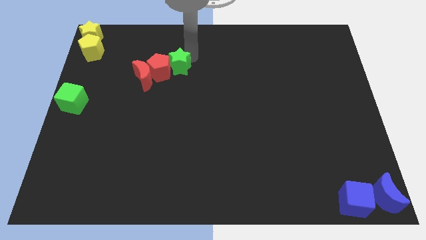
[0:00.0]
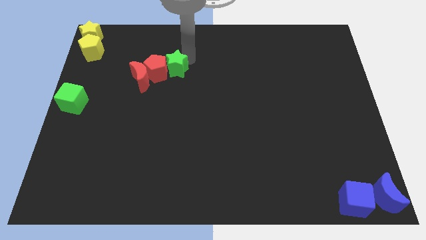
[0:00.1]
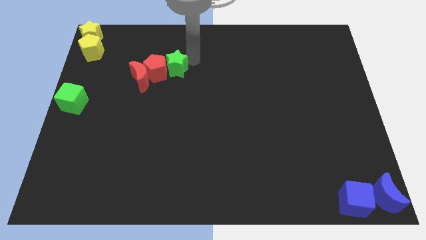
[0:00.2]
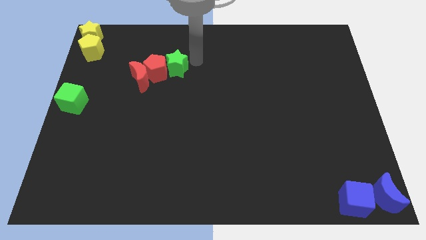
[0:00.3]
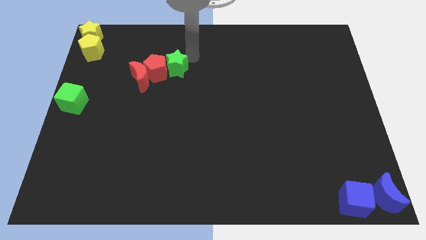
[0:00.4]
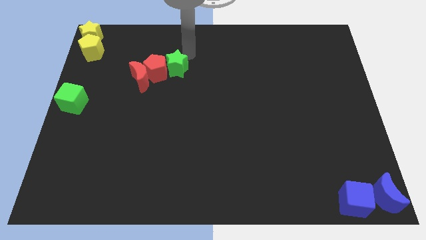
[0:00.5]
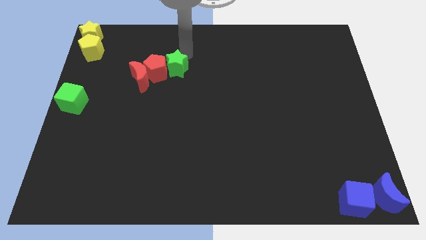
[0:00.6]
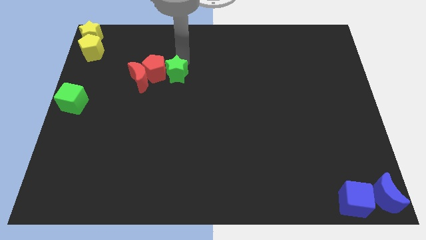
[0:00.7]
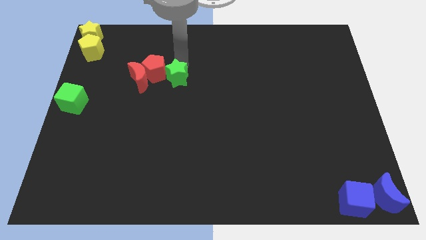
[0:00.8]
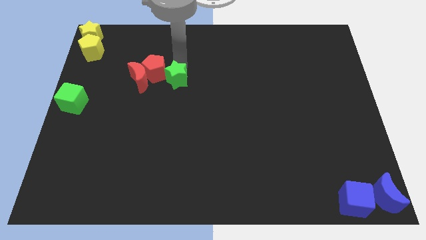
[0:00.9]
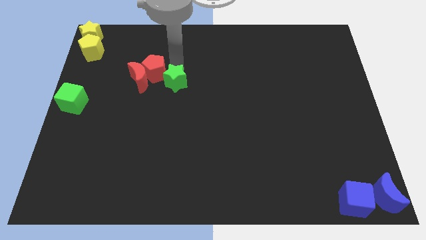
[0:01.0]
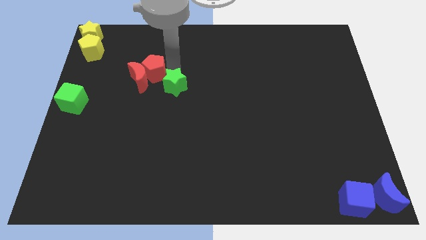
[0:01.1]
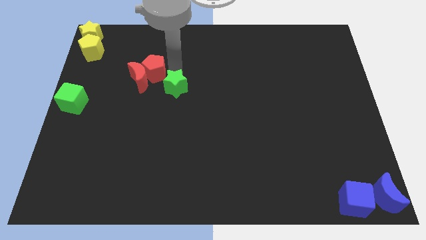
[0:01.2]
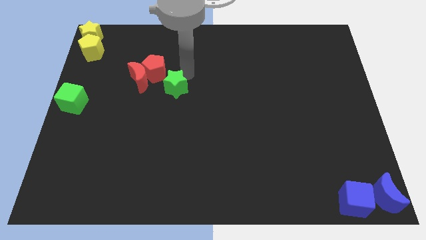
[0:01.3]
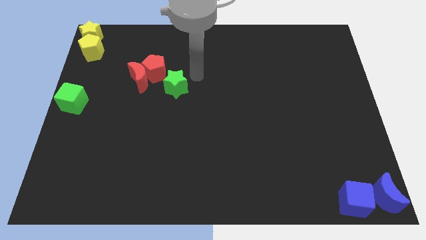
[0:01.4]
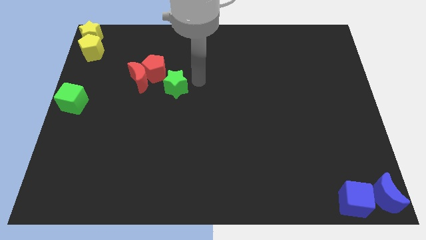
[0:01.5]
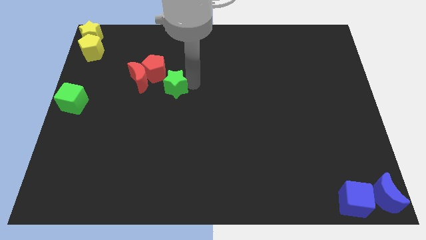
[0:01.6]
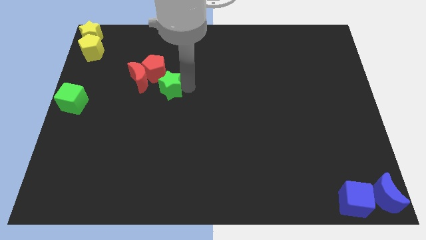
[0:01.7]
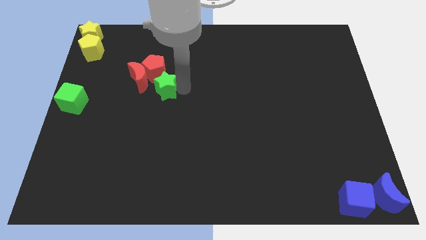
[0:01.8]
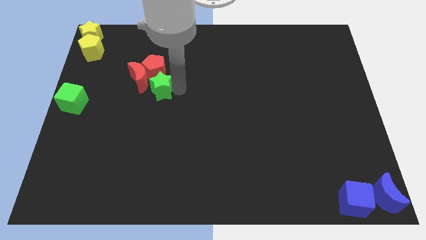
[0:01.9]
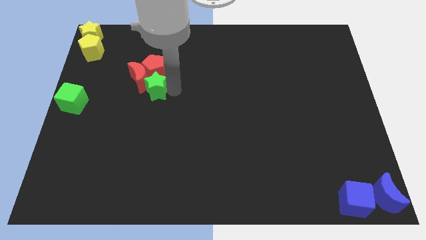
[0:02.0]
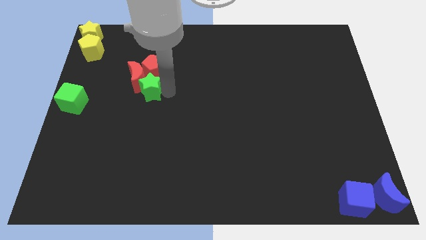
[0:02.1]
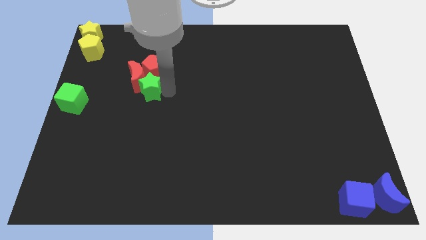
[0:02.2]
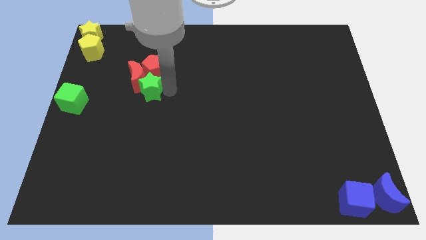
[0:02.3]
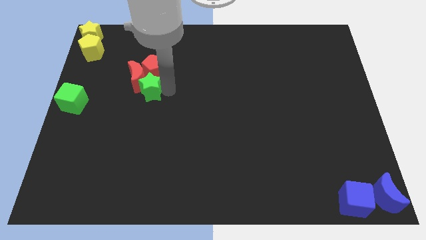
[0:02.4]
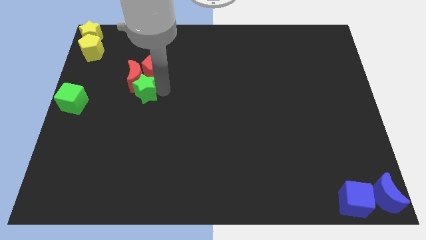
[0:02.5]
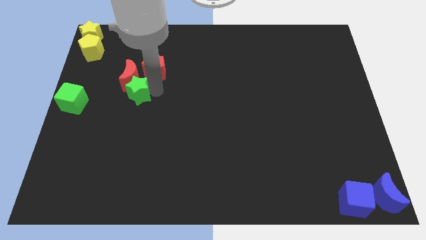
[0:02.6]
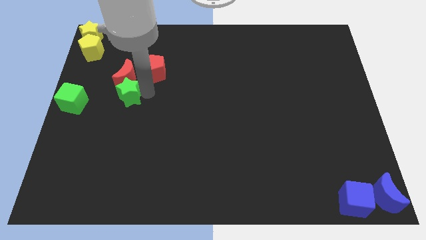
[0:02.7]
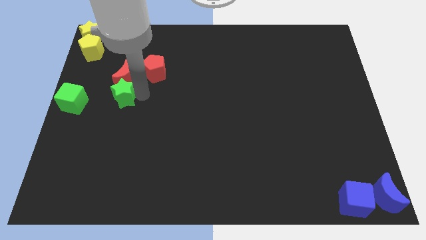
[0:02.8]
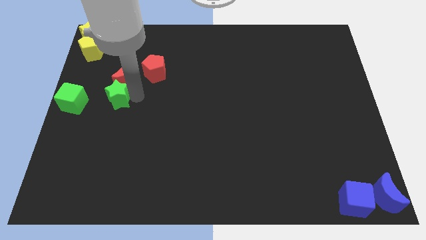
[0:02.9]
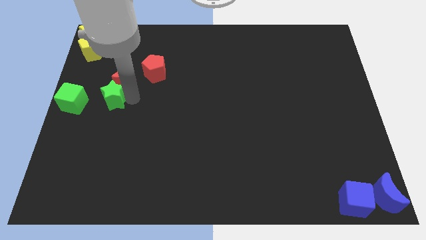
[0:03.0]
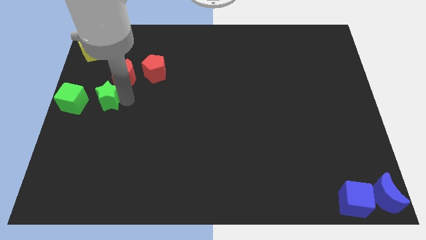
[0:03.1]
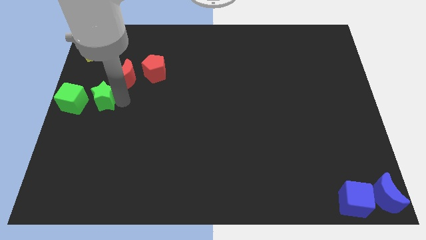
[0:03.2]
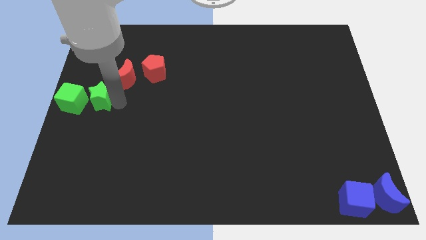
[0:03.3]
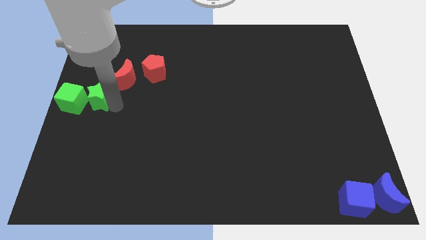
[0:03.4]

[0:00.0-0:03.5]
push the green star right to the green cube

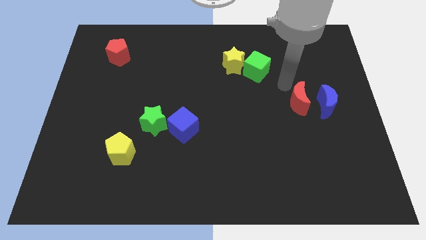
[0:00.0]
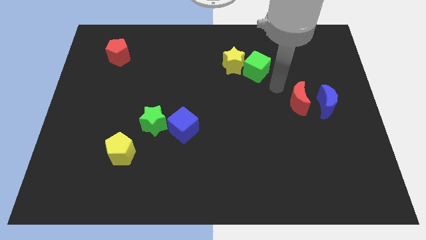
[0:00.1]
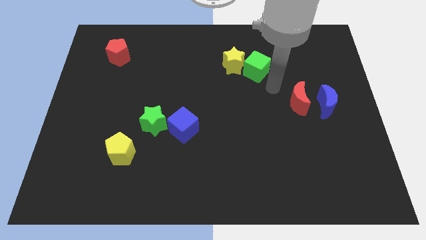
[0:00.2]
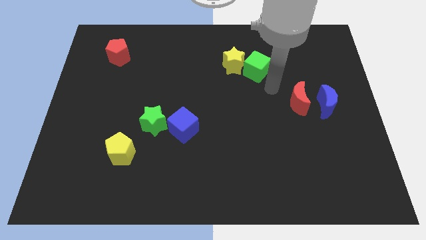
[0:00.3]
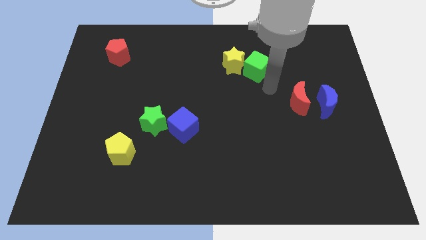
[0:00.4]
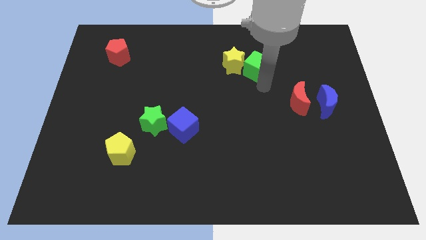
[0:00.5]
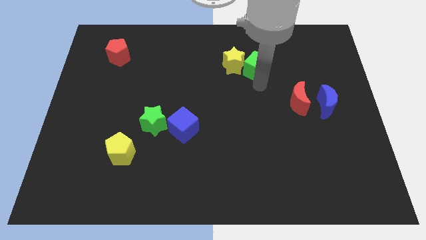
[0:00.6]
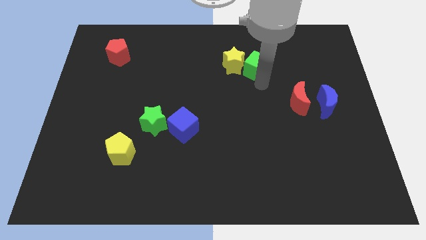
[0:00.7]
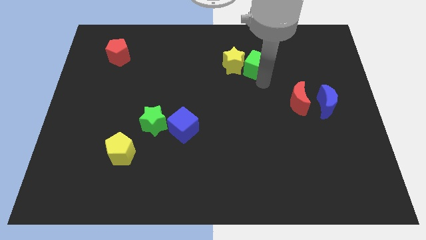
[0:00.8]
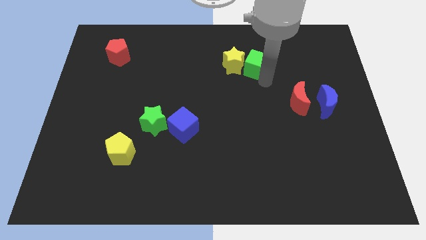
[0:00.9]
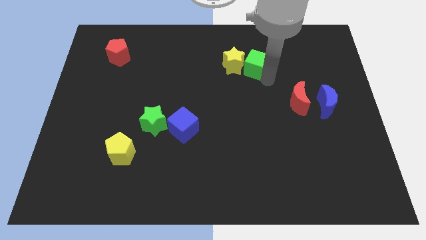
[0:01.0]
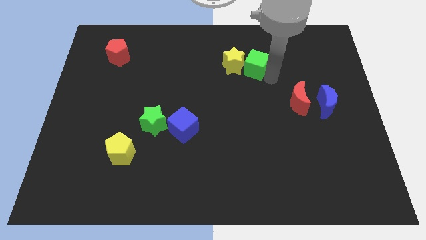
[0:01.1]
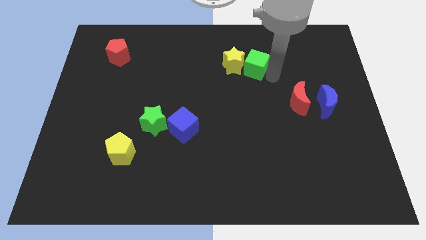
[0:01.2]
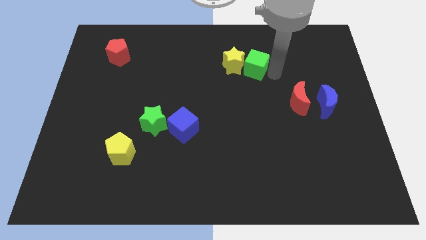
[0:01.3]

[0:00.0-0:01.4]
slightly move the green cube to the top of the board

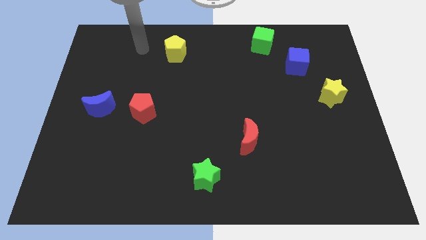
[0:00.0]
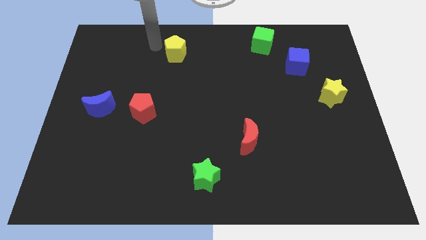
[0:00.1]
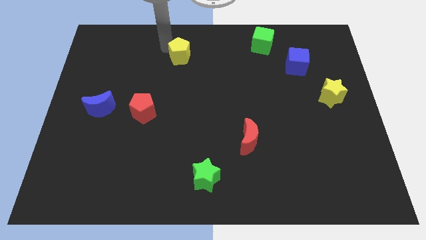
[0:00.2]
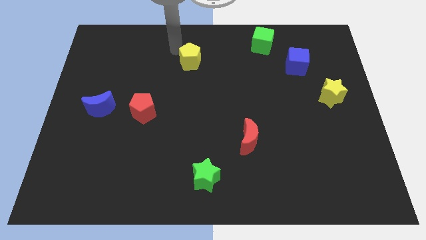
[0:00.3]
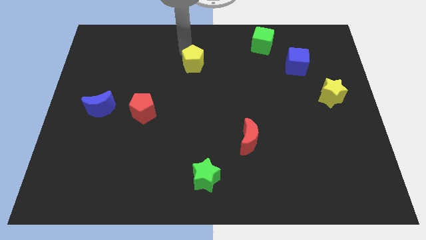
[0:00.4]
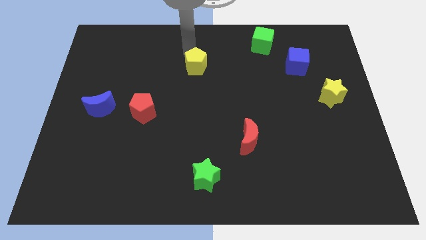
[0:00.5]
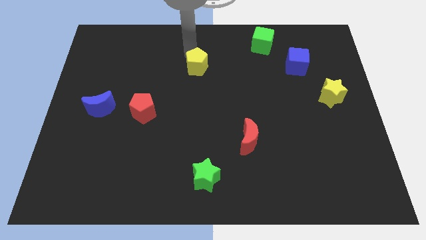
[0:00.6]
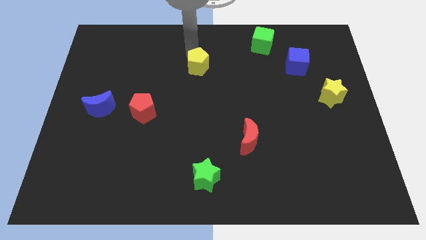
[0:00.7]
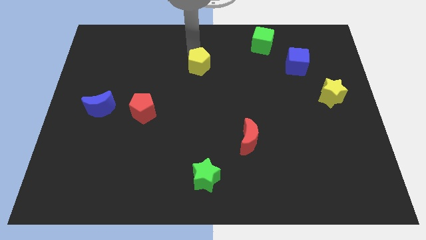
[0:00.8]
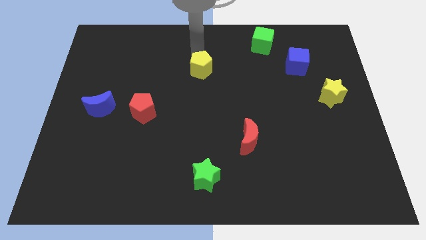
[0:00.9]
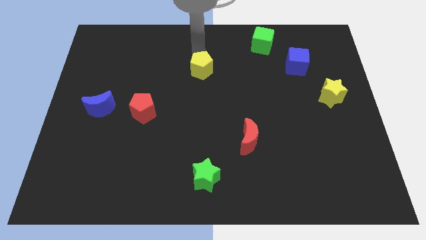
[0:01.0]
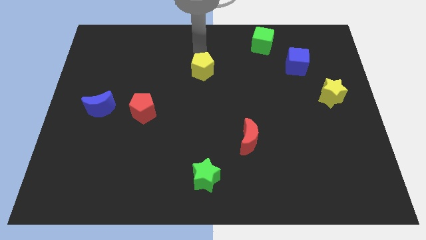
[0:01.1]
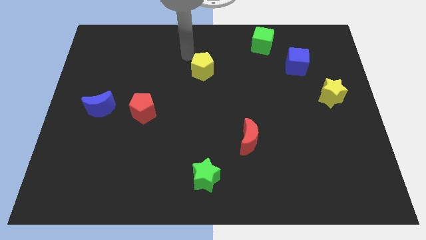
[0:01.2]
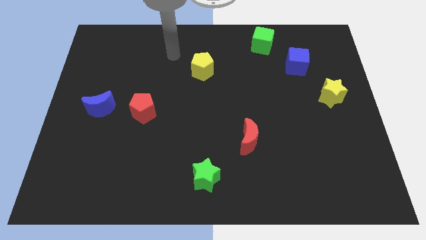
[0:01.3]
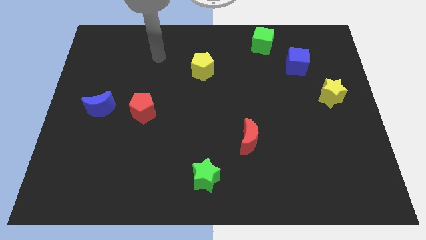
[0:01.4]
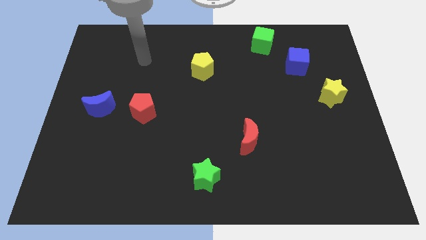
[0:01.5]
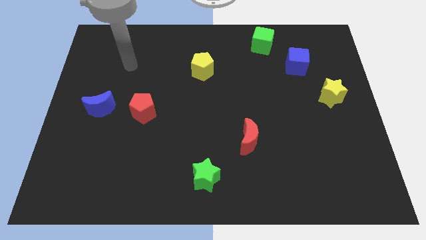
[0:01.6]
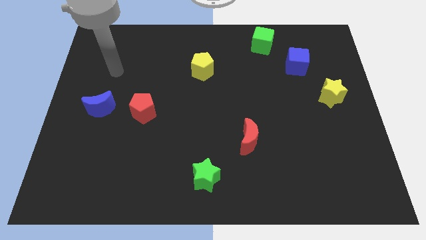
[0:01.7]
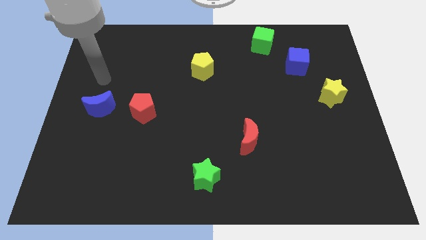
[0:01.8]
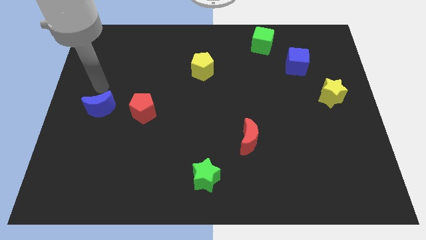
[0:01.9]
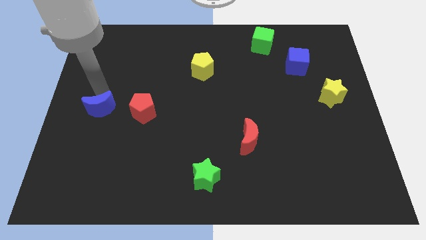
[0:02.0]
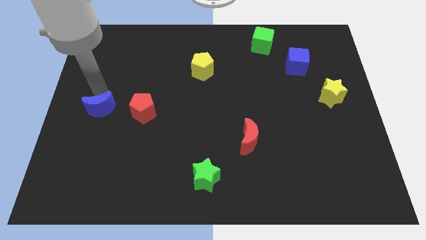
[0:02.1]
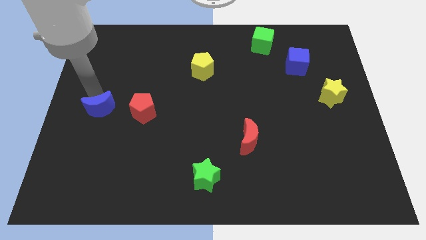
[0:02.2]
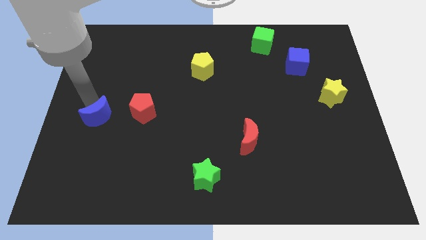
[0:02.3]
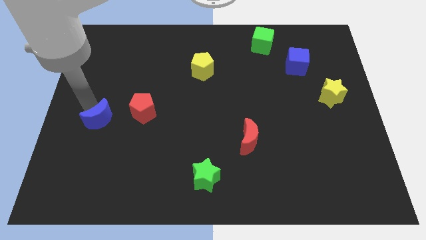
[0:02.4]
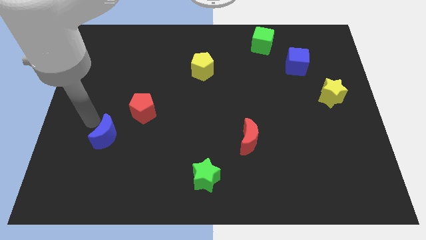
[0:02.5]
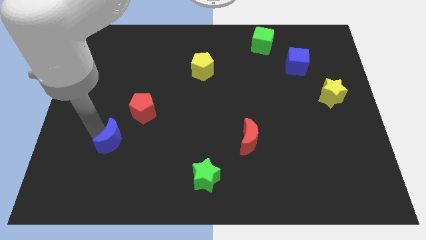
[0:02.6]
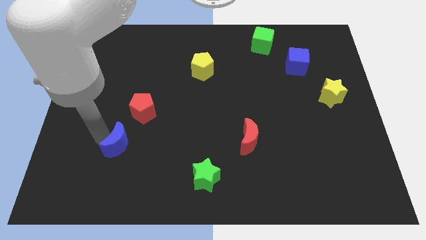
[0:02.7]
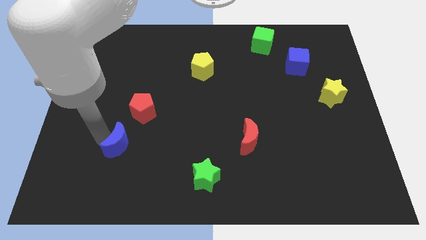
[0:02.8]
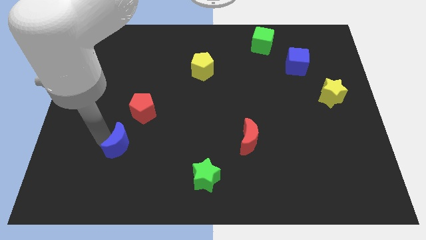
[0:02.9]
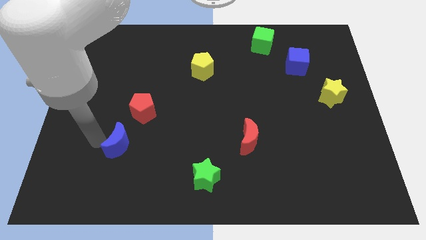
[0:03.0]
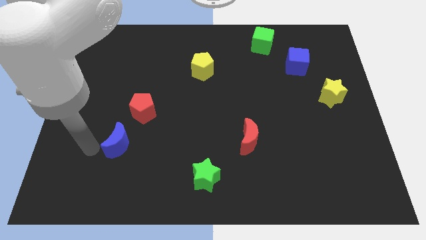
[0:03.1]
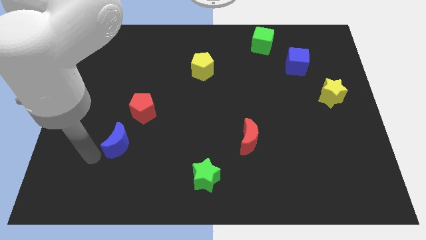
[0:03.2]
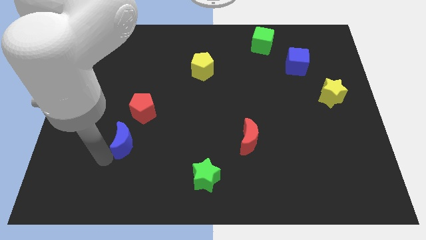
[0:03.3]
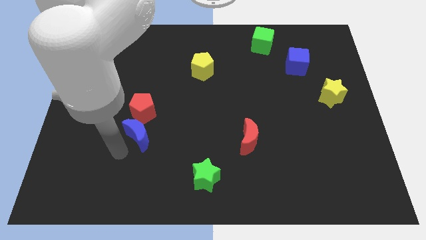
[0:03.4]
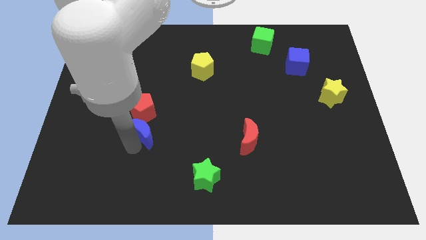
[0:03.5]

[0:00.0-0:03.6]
place the blue crescent to the bottom of the red pentagon

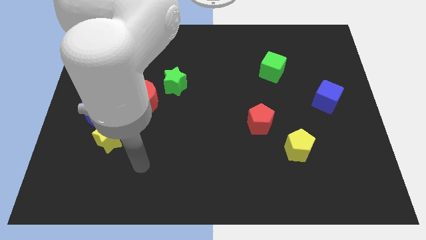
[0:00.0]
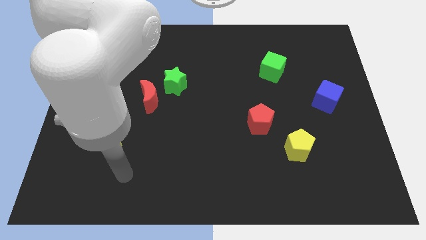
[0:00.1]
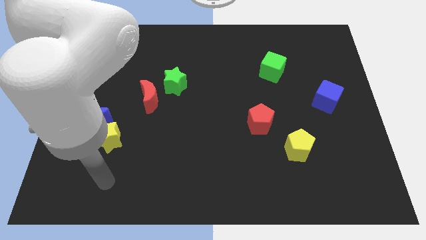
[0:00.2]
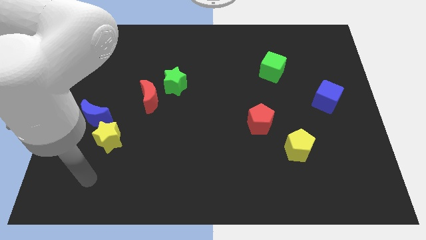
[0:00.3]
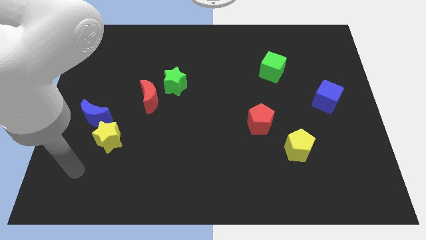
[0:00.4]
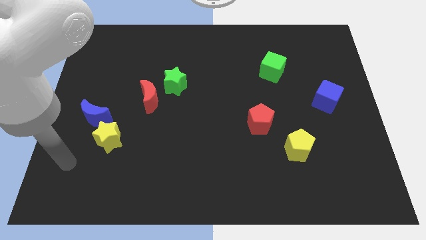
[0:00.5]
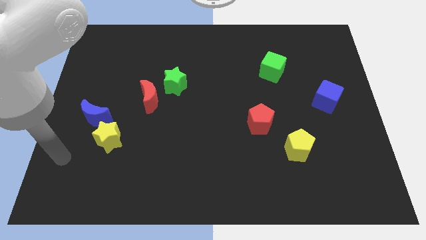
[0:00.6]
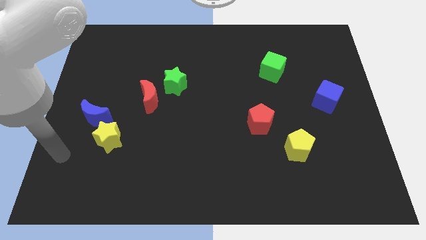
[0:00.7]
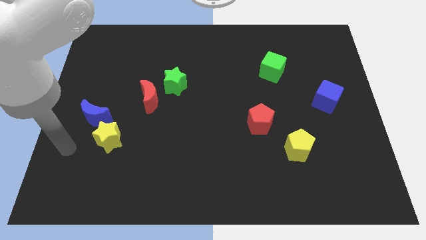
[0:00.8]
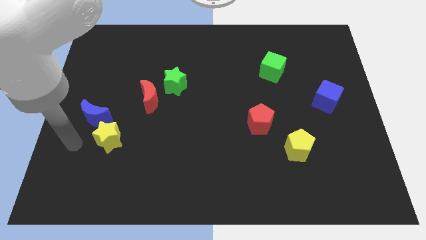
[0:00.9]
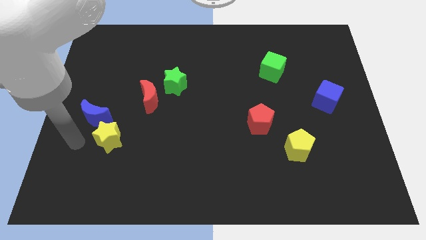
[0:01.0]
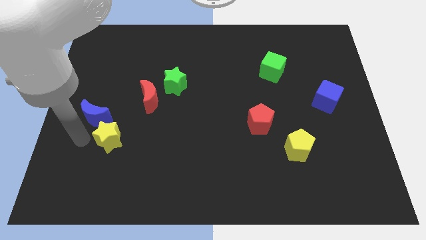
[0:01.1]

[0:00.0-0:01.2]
move the arm diagonally left side of the yellow star
